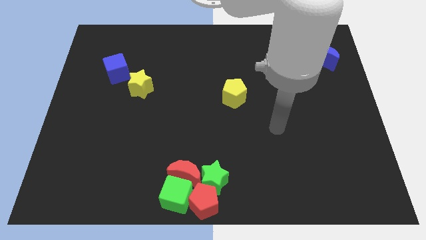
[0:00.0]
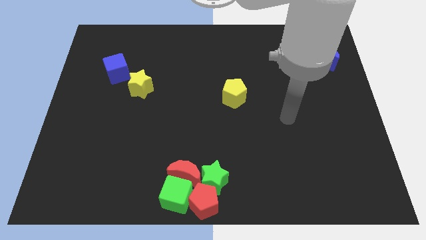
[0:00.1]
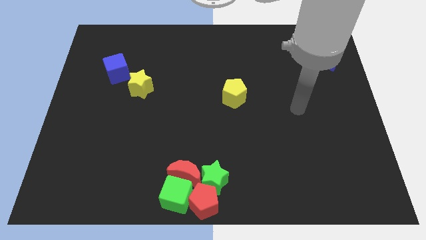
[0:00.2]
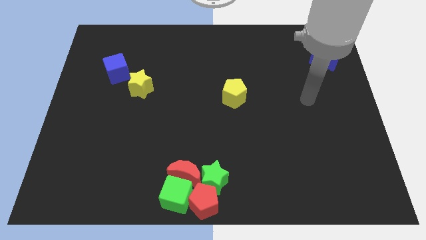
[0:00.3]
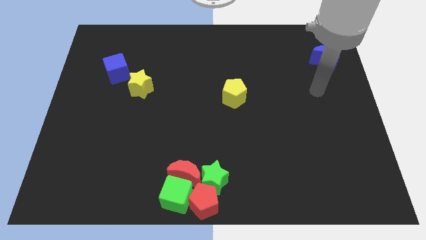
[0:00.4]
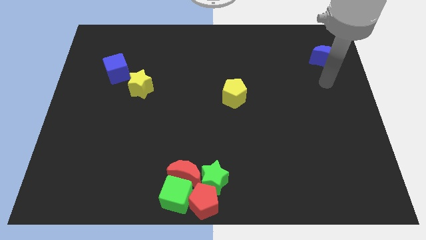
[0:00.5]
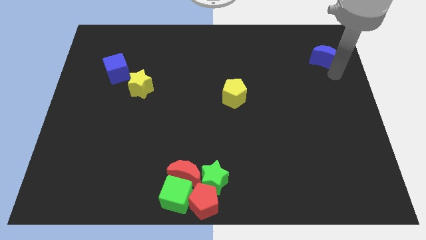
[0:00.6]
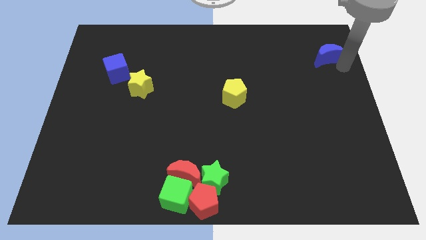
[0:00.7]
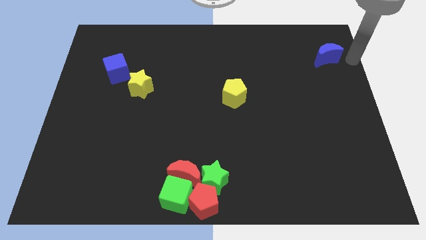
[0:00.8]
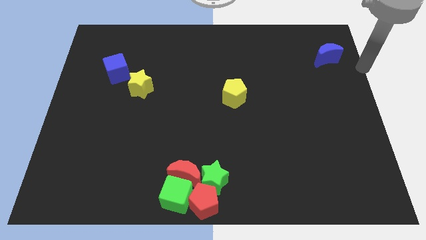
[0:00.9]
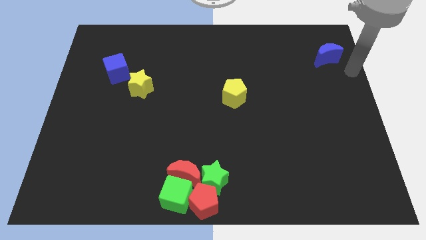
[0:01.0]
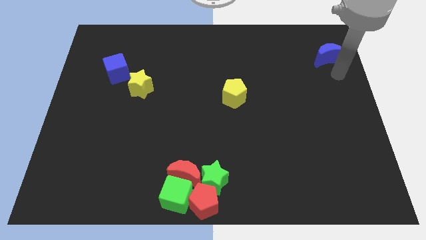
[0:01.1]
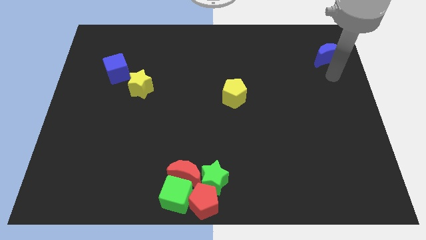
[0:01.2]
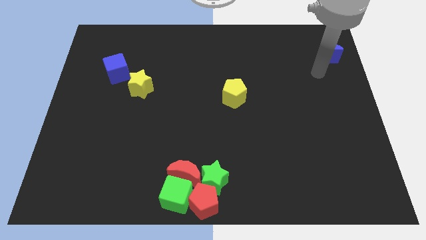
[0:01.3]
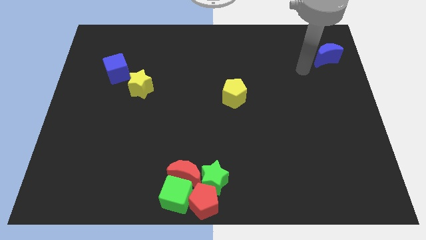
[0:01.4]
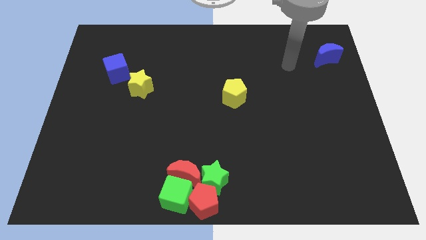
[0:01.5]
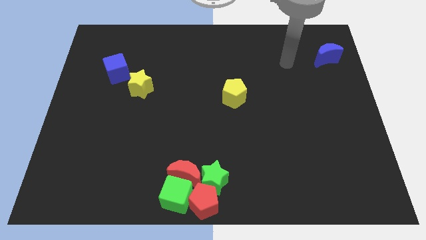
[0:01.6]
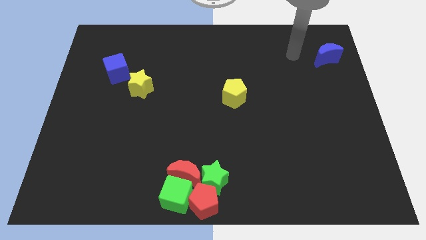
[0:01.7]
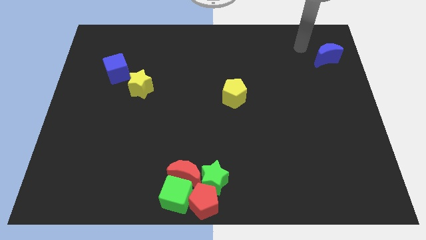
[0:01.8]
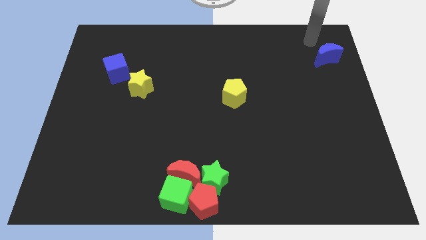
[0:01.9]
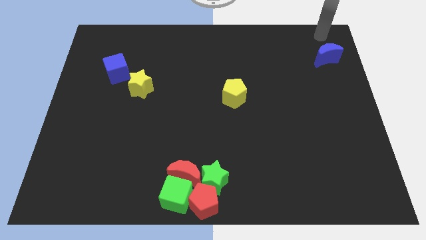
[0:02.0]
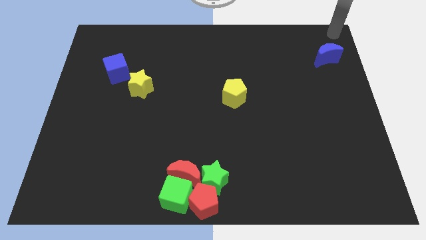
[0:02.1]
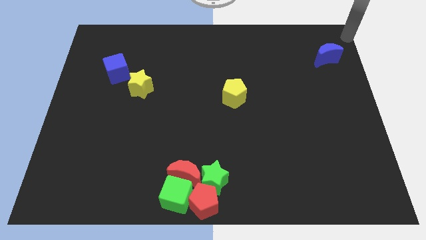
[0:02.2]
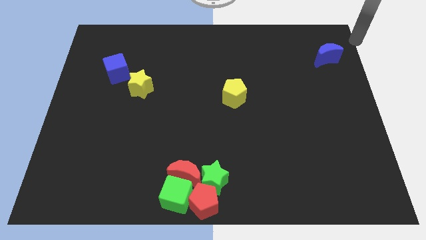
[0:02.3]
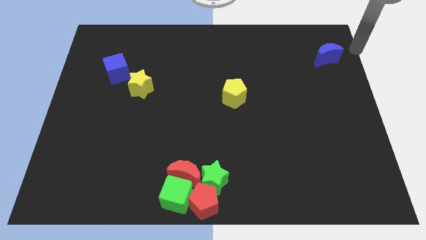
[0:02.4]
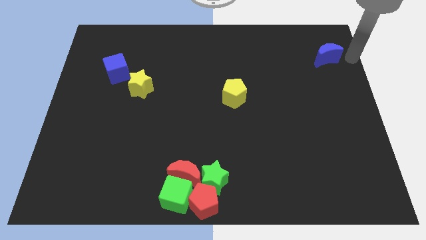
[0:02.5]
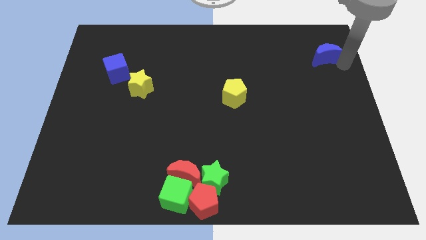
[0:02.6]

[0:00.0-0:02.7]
move your arm and touch the blue moon

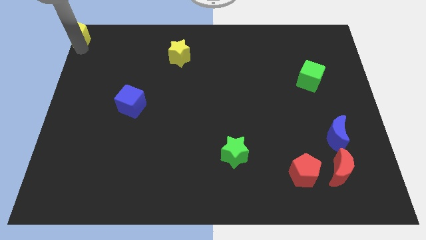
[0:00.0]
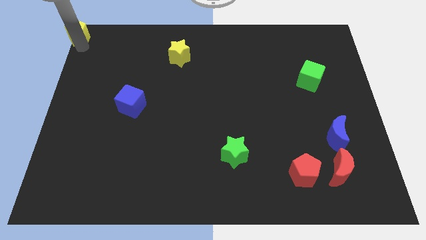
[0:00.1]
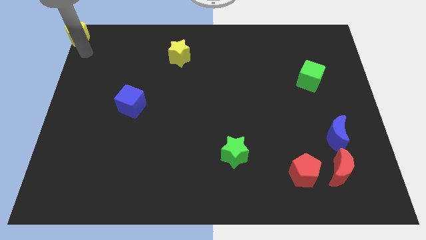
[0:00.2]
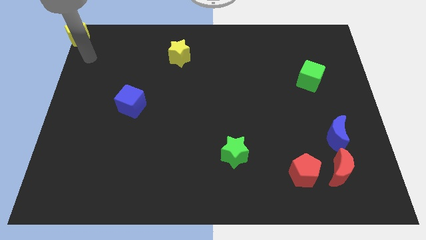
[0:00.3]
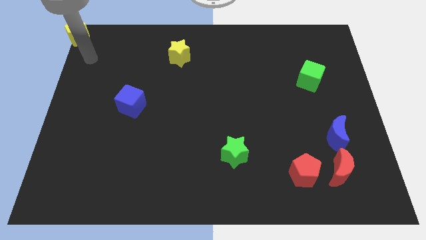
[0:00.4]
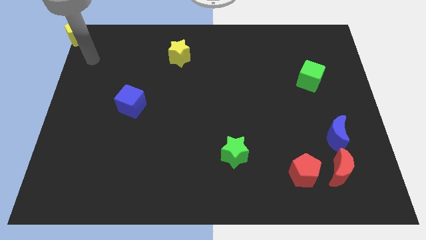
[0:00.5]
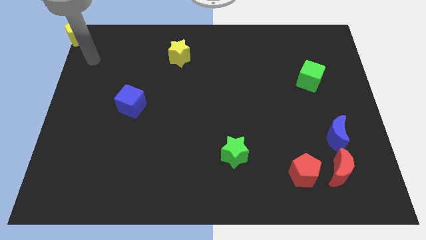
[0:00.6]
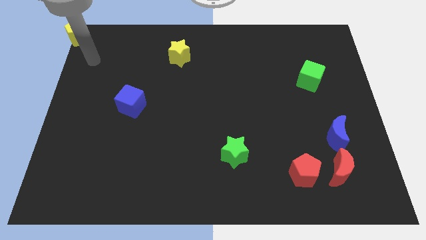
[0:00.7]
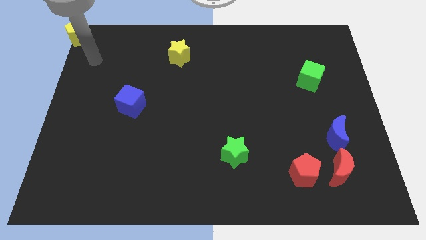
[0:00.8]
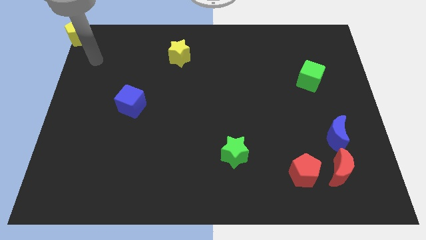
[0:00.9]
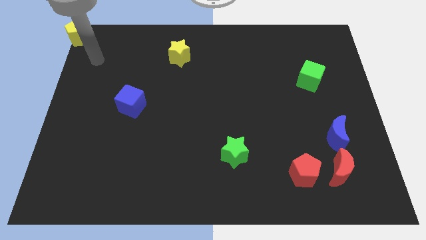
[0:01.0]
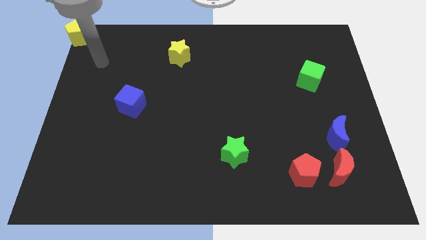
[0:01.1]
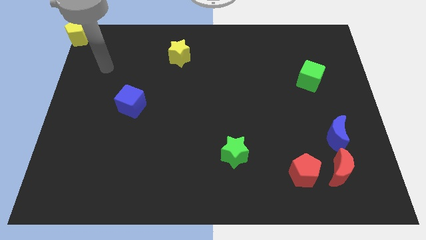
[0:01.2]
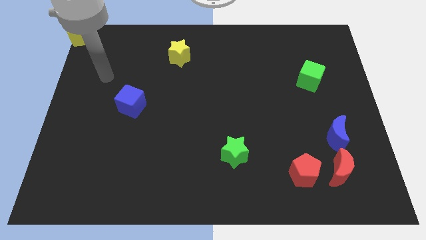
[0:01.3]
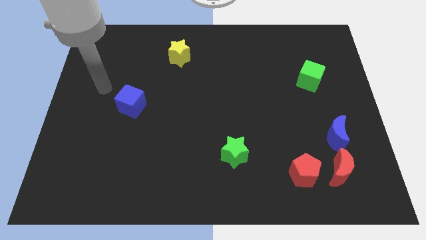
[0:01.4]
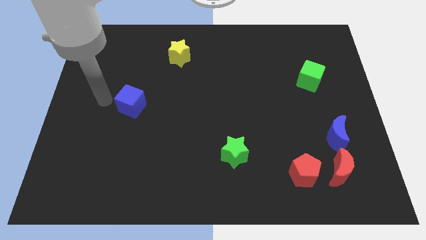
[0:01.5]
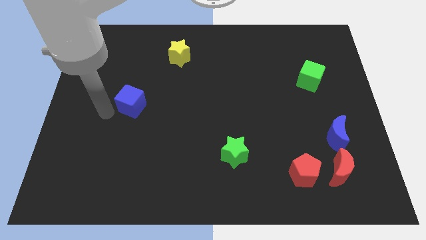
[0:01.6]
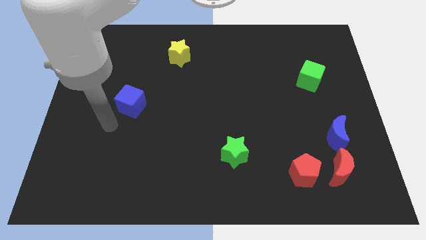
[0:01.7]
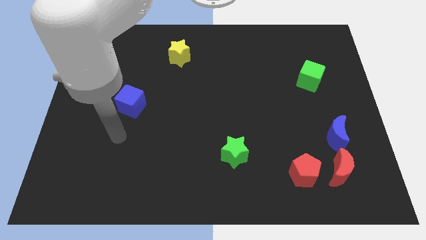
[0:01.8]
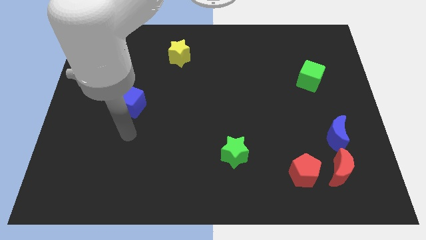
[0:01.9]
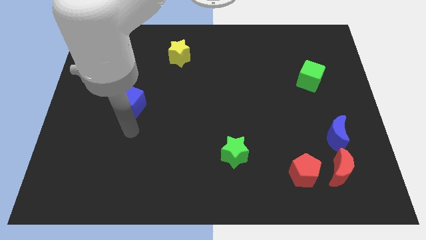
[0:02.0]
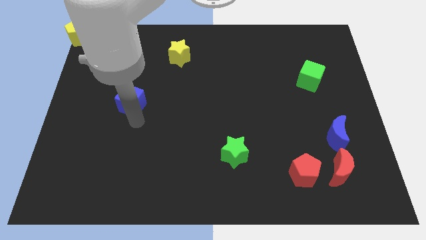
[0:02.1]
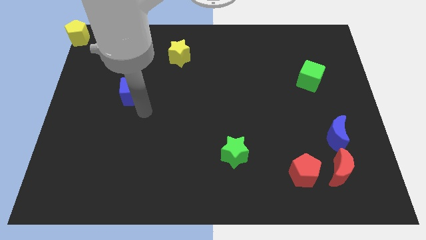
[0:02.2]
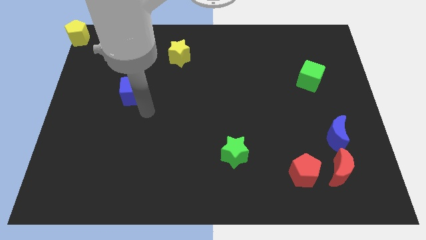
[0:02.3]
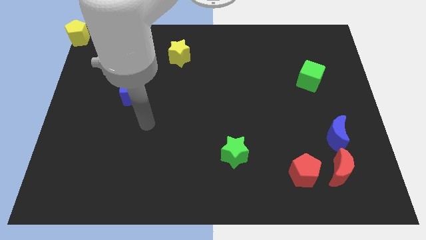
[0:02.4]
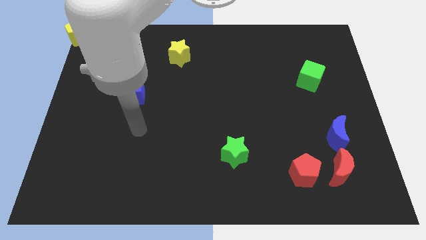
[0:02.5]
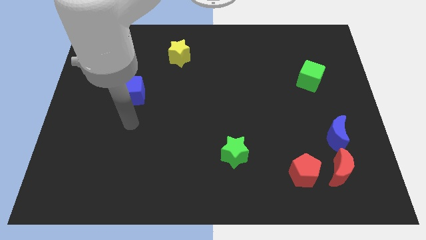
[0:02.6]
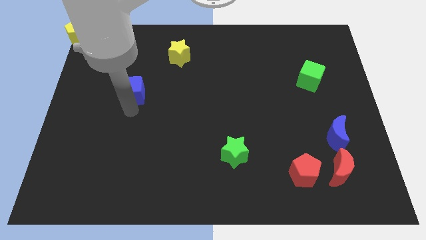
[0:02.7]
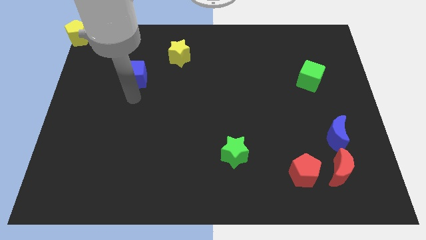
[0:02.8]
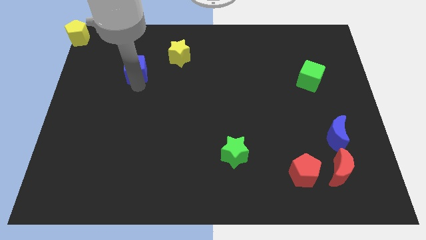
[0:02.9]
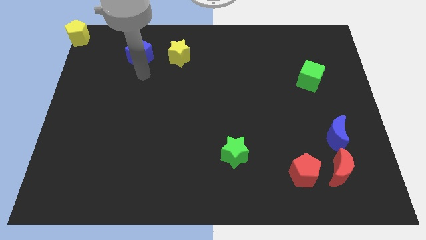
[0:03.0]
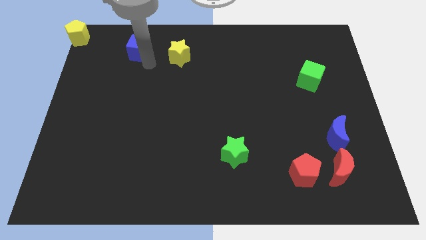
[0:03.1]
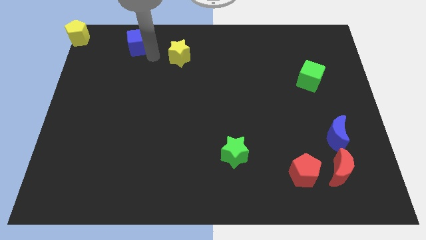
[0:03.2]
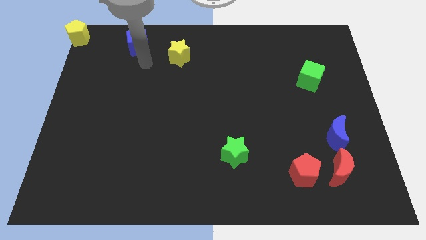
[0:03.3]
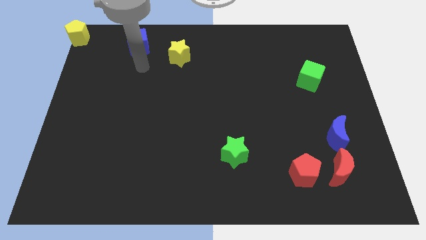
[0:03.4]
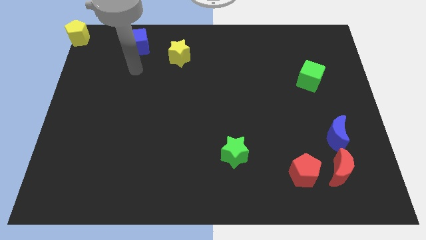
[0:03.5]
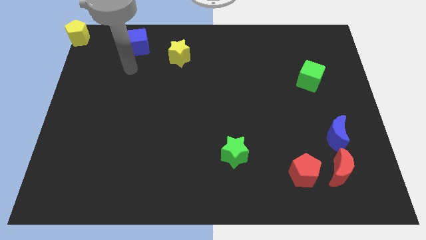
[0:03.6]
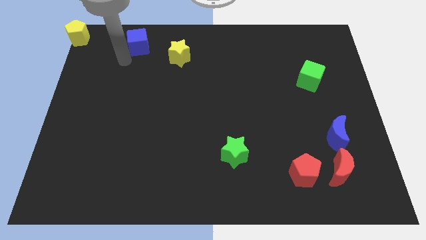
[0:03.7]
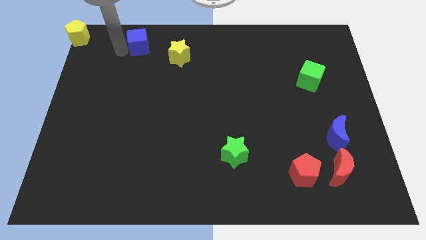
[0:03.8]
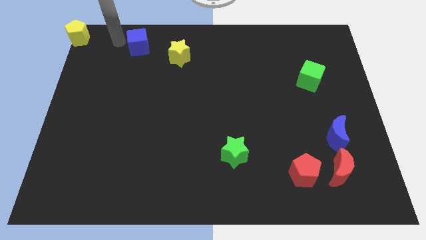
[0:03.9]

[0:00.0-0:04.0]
push blue cube beside yellow star

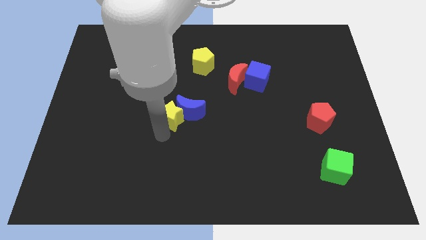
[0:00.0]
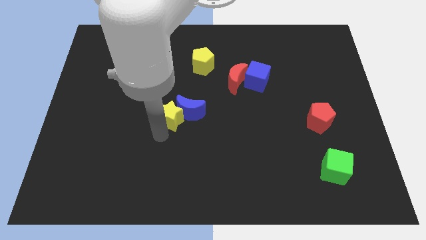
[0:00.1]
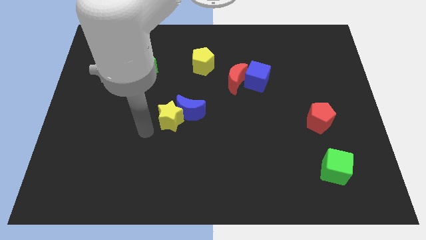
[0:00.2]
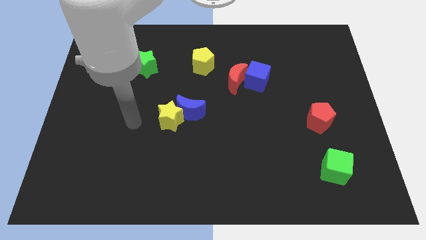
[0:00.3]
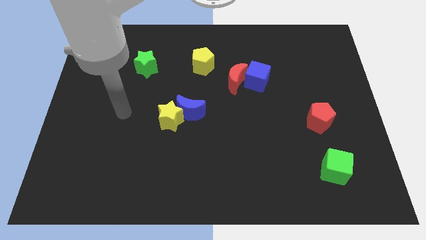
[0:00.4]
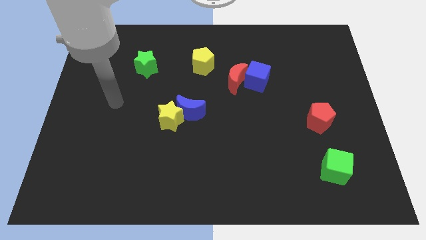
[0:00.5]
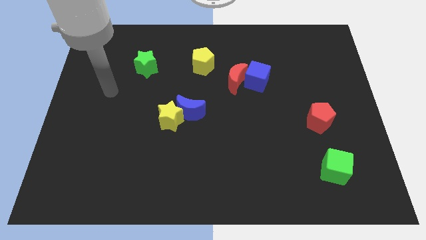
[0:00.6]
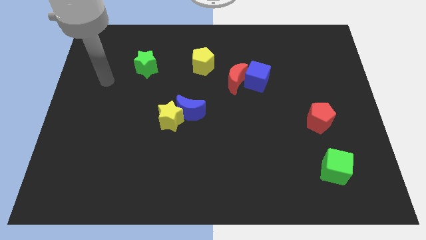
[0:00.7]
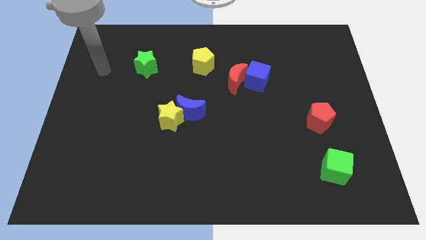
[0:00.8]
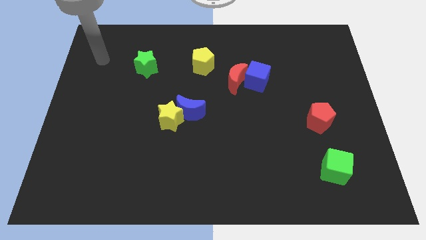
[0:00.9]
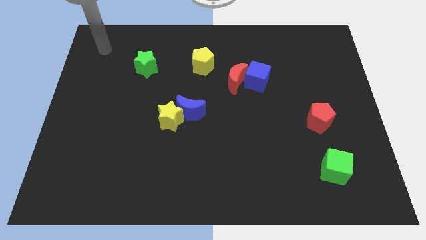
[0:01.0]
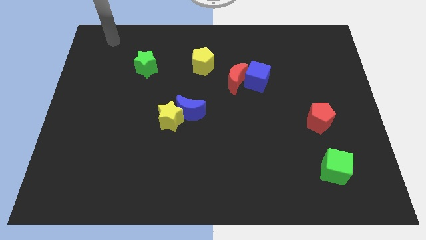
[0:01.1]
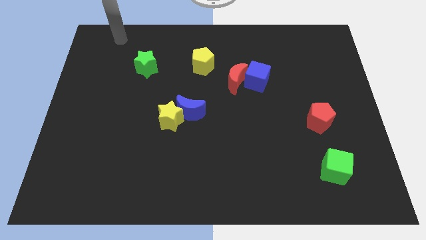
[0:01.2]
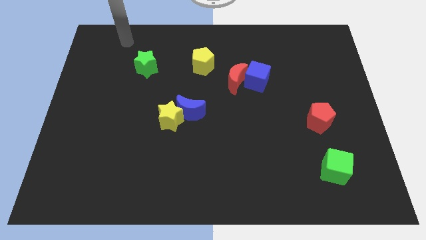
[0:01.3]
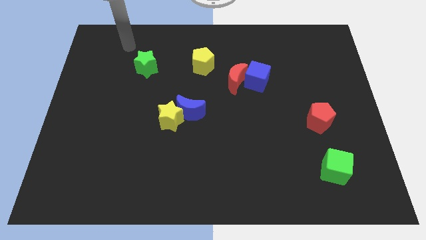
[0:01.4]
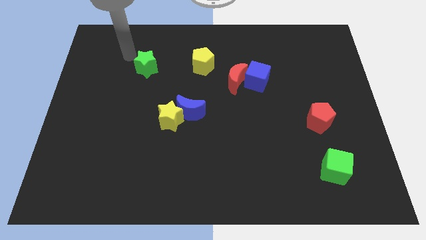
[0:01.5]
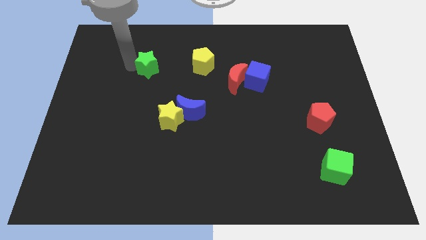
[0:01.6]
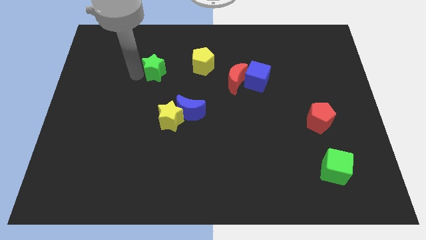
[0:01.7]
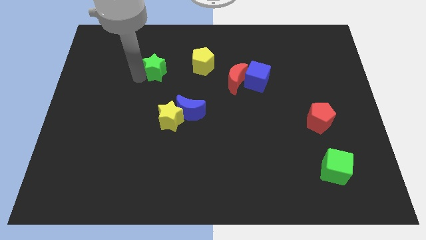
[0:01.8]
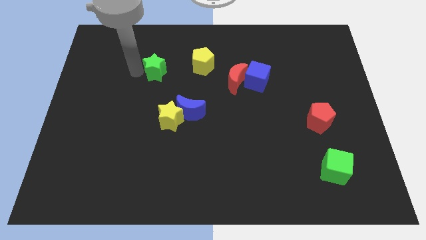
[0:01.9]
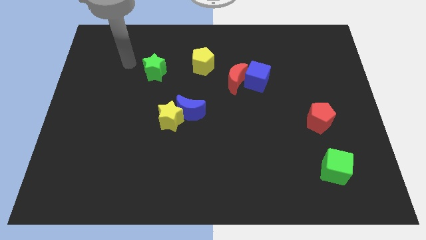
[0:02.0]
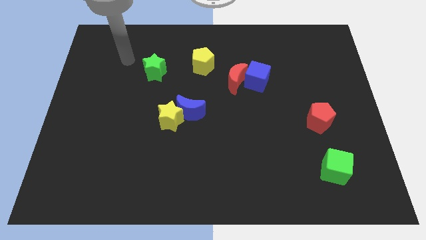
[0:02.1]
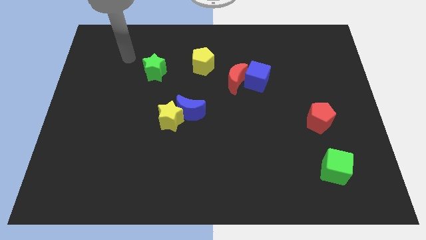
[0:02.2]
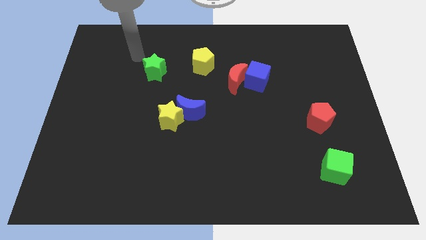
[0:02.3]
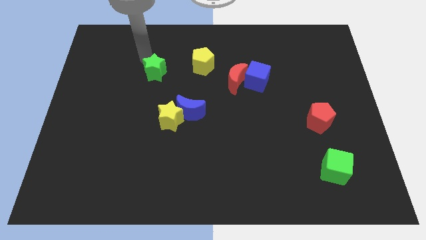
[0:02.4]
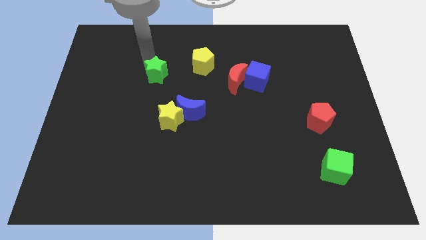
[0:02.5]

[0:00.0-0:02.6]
push green star left to the yellow pentagon
